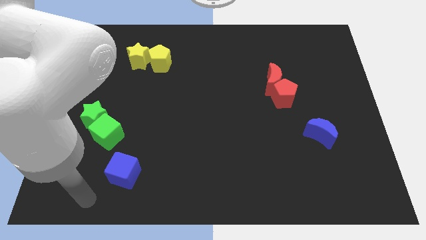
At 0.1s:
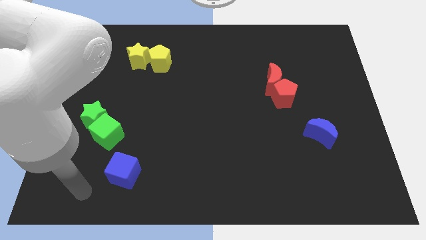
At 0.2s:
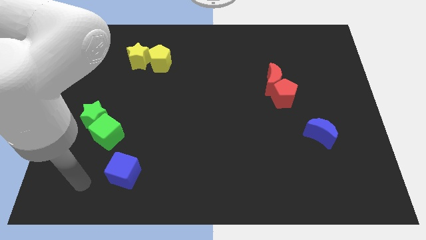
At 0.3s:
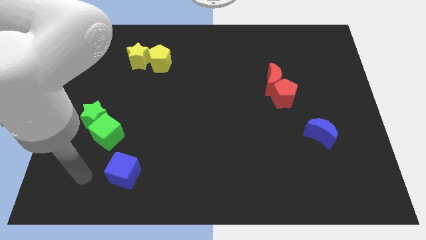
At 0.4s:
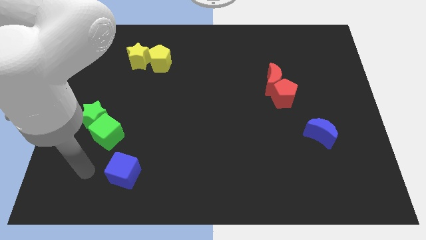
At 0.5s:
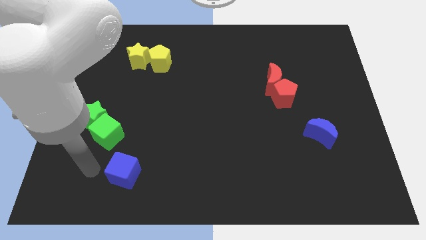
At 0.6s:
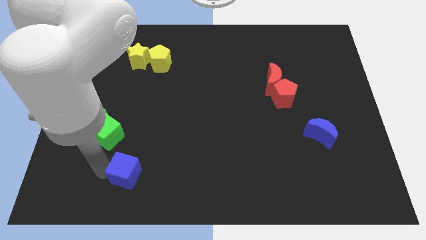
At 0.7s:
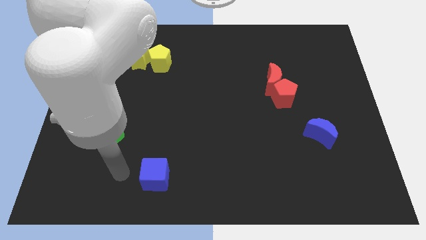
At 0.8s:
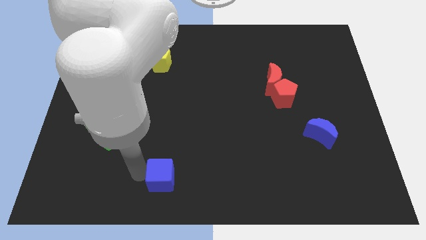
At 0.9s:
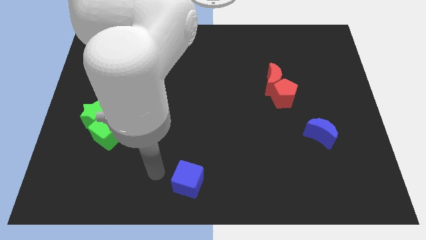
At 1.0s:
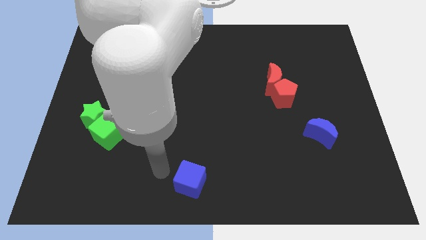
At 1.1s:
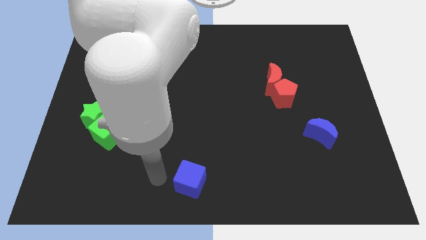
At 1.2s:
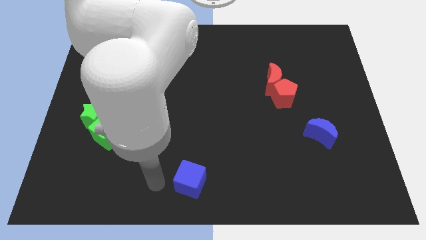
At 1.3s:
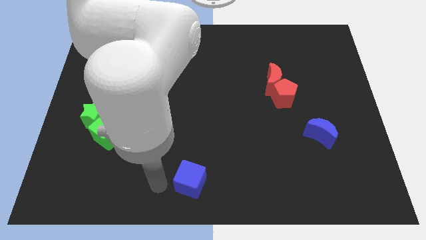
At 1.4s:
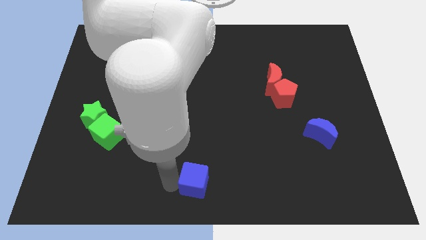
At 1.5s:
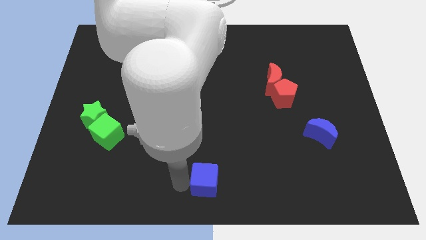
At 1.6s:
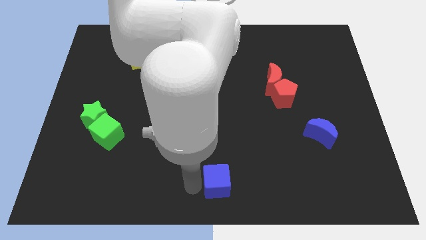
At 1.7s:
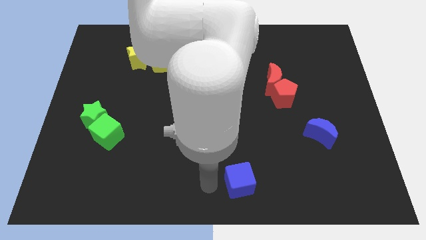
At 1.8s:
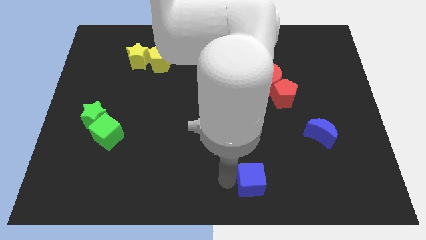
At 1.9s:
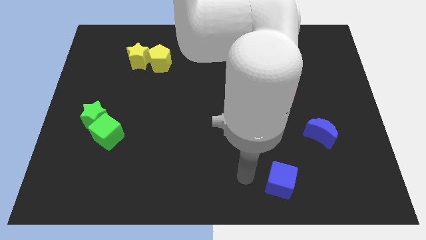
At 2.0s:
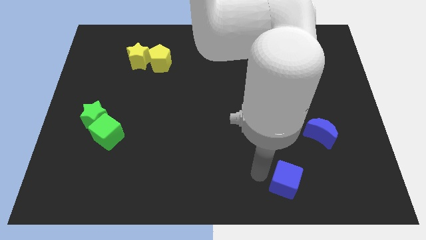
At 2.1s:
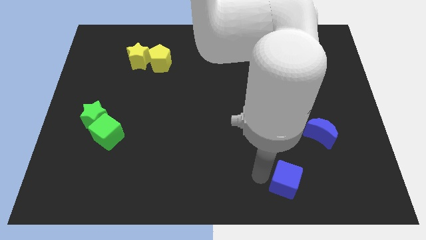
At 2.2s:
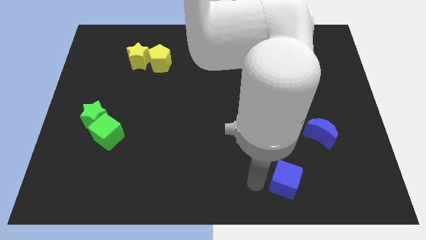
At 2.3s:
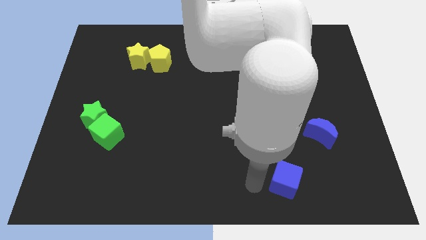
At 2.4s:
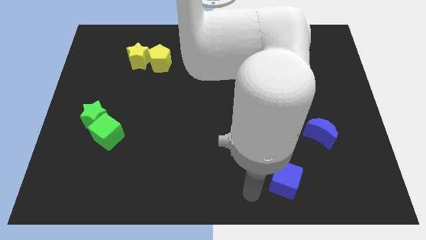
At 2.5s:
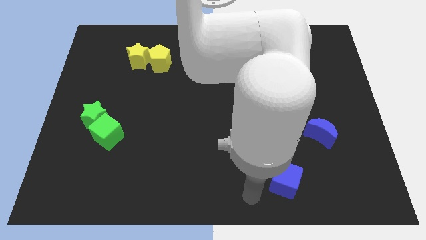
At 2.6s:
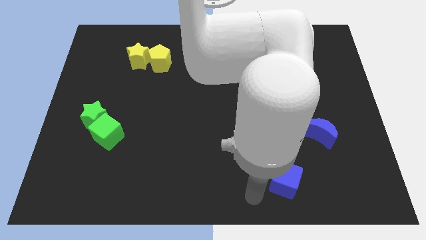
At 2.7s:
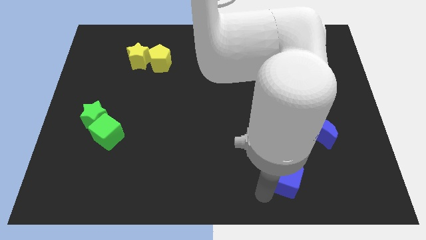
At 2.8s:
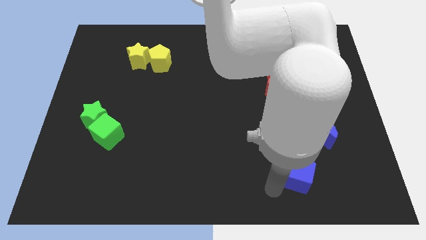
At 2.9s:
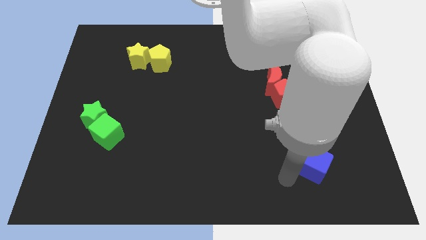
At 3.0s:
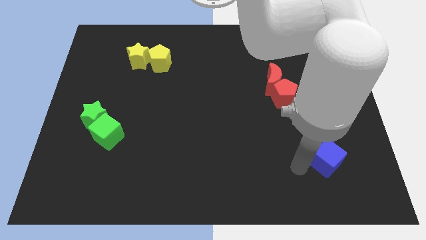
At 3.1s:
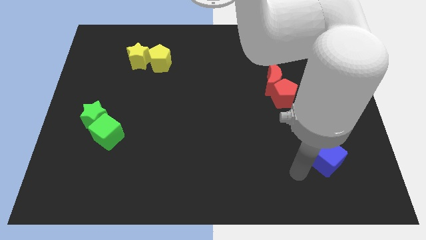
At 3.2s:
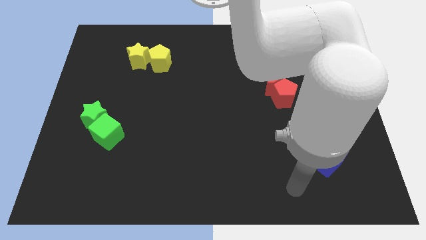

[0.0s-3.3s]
place the blue cube down to the blue moon

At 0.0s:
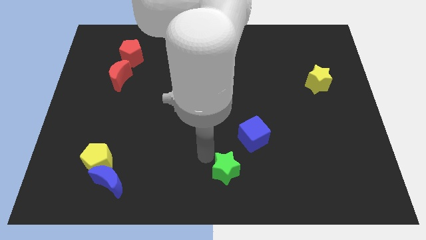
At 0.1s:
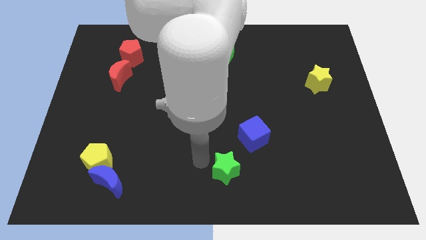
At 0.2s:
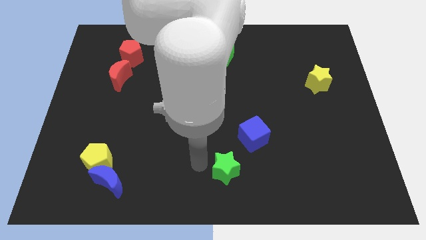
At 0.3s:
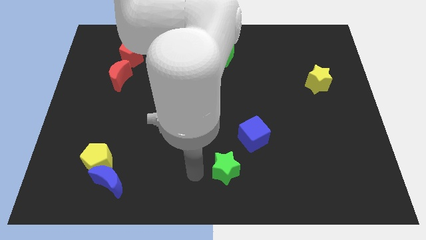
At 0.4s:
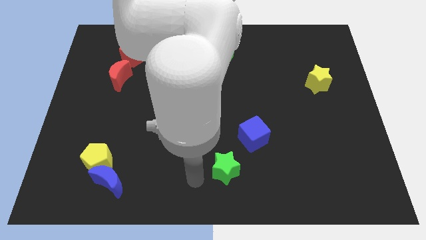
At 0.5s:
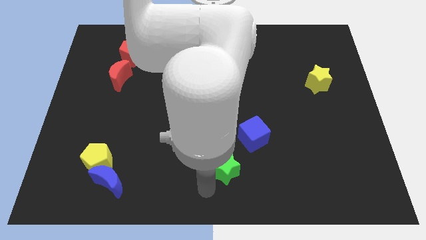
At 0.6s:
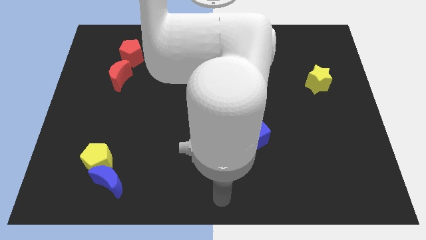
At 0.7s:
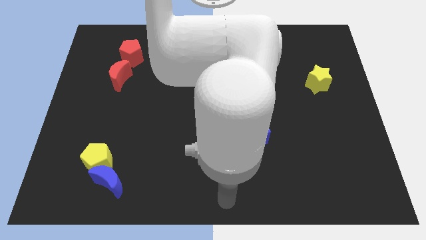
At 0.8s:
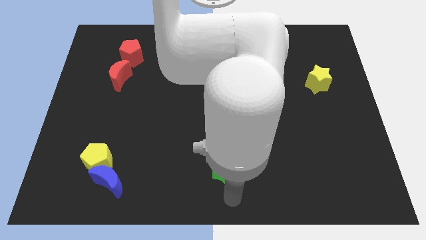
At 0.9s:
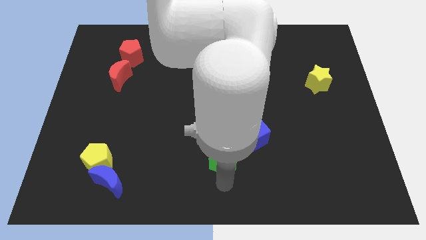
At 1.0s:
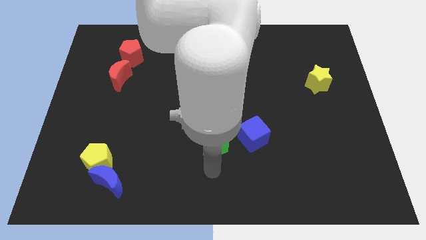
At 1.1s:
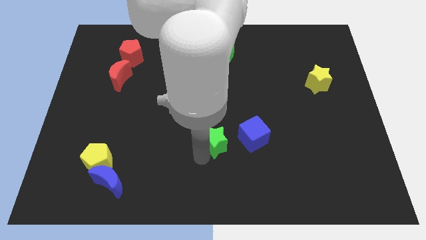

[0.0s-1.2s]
place the green star left to the blue cube

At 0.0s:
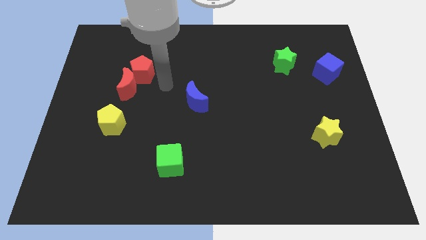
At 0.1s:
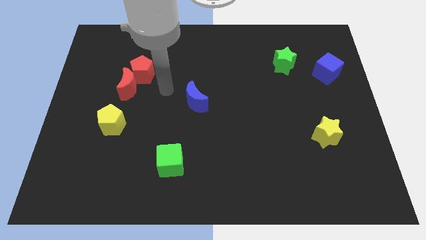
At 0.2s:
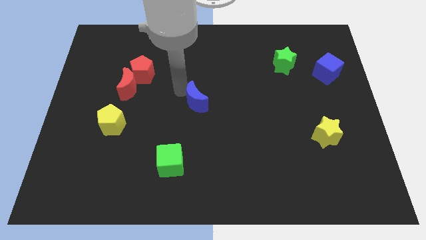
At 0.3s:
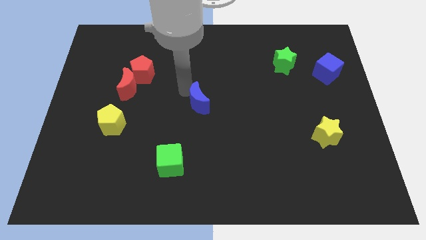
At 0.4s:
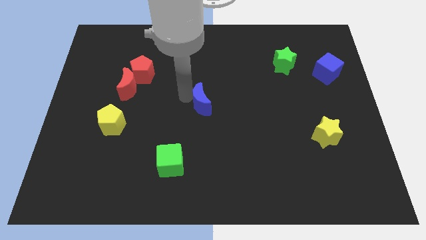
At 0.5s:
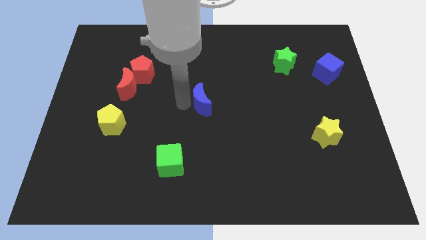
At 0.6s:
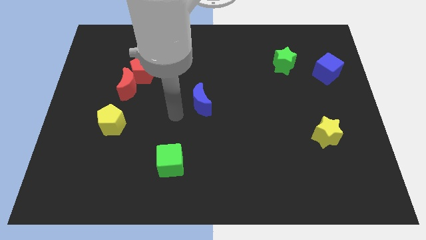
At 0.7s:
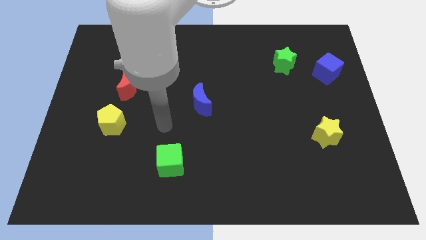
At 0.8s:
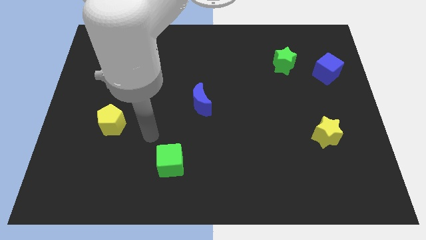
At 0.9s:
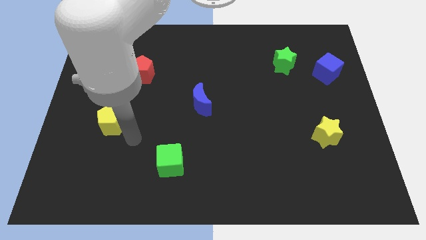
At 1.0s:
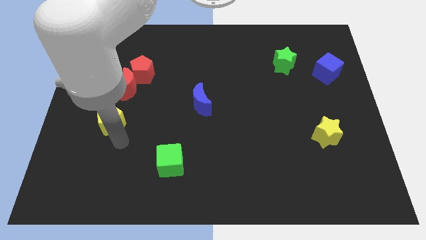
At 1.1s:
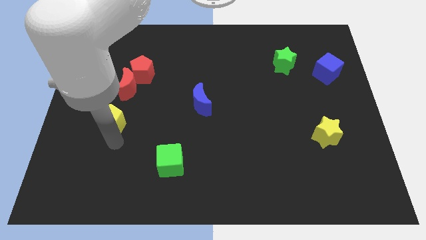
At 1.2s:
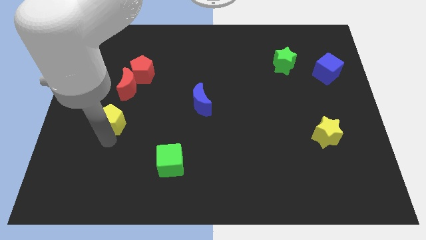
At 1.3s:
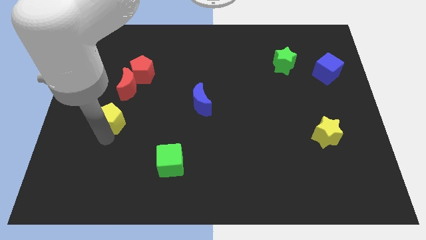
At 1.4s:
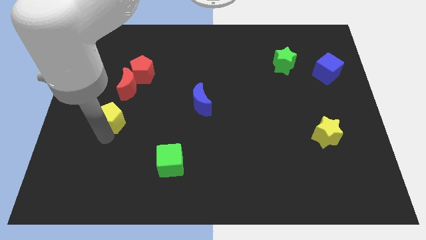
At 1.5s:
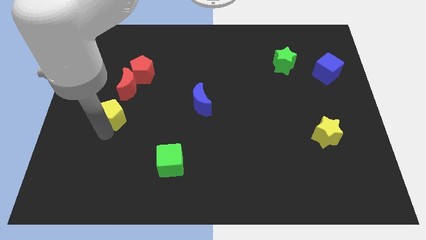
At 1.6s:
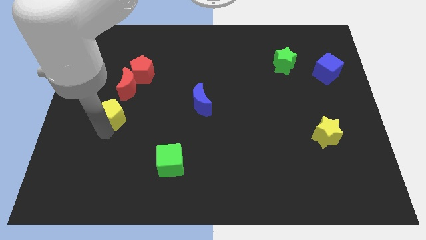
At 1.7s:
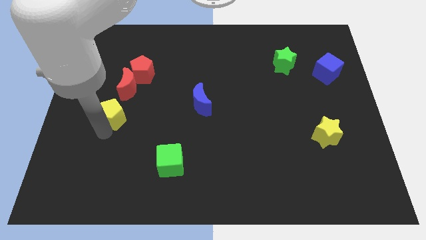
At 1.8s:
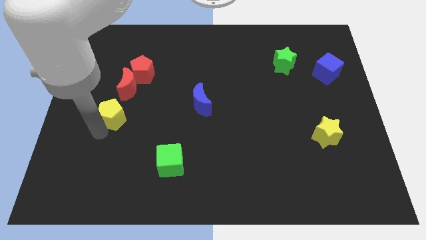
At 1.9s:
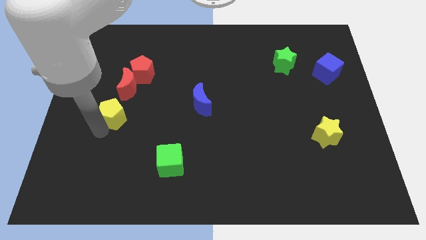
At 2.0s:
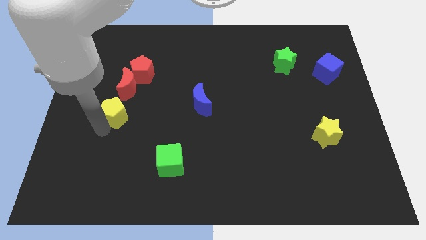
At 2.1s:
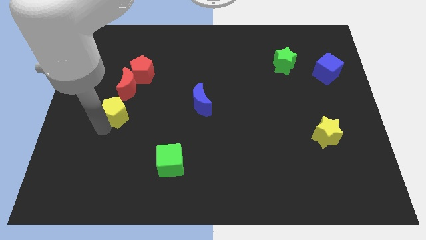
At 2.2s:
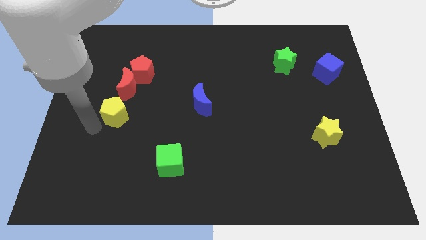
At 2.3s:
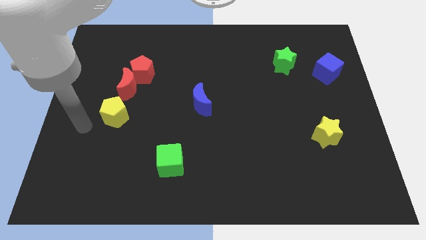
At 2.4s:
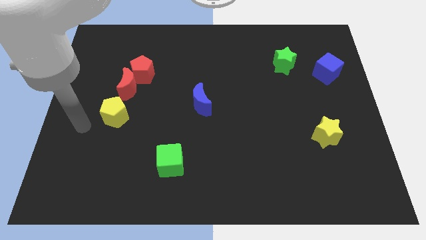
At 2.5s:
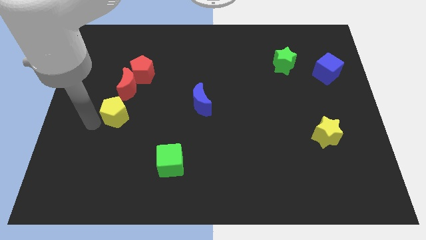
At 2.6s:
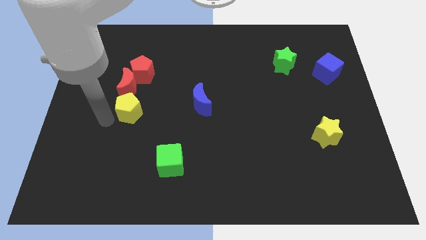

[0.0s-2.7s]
slide the yellow pentagon close to the red moon

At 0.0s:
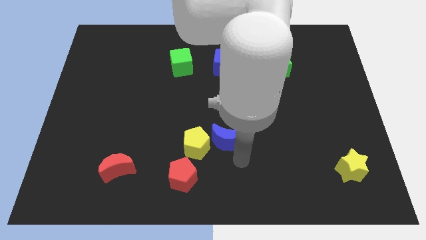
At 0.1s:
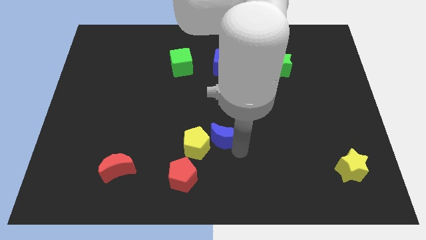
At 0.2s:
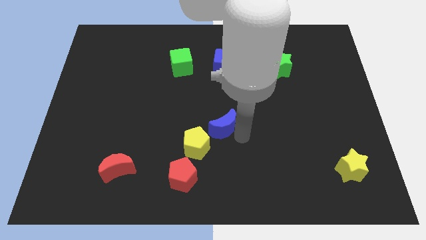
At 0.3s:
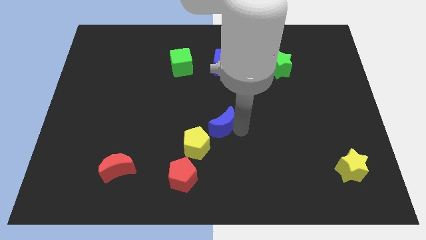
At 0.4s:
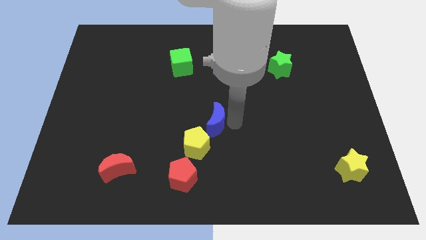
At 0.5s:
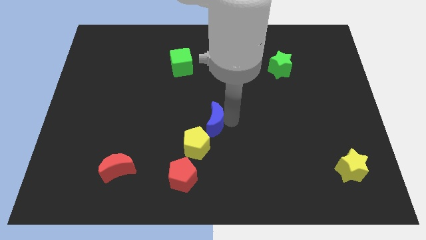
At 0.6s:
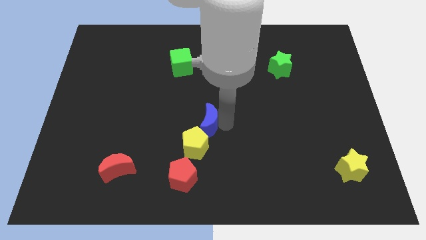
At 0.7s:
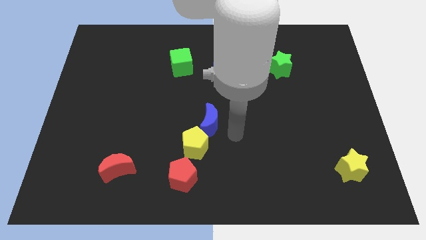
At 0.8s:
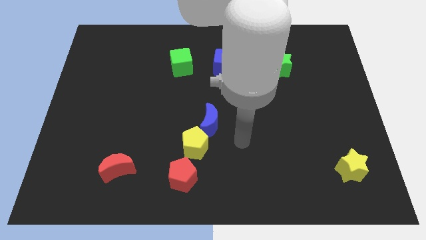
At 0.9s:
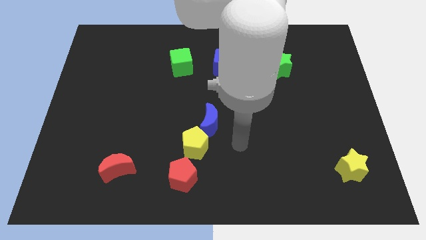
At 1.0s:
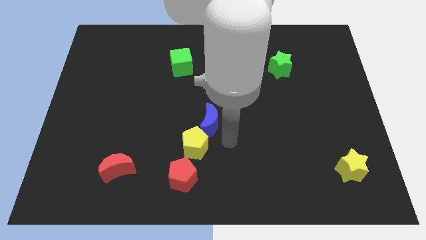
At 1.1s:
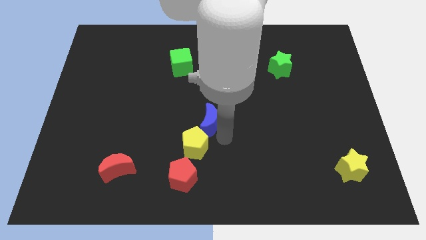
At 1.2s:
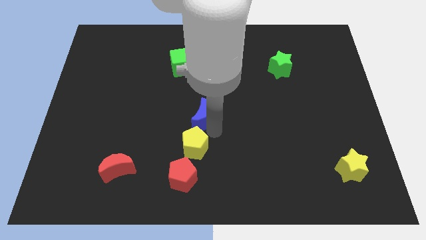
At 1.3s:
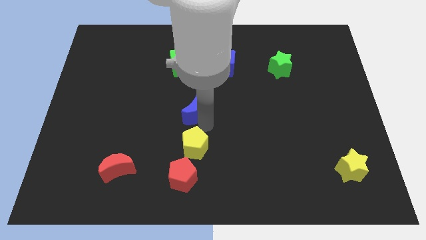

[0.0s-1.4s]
push blue crescent above yellow pentagon

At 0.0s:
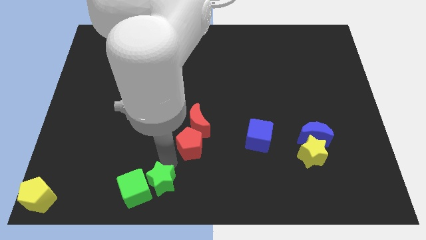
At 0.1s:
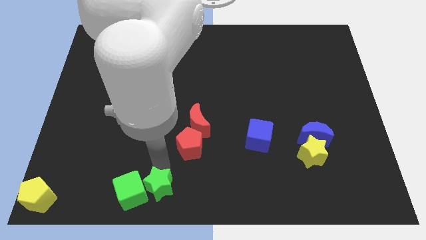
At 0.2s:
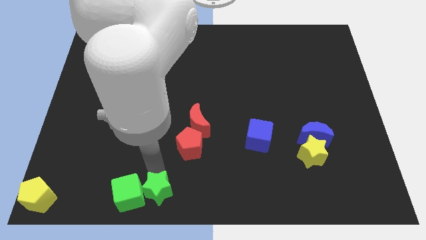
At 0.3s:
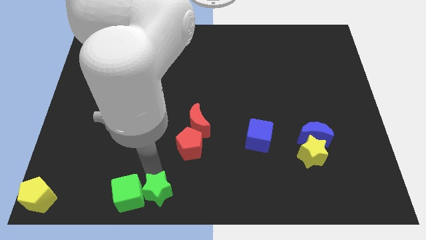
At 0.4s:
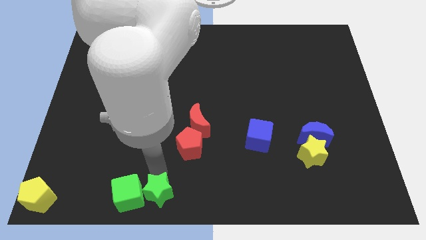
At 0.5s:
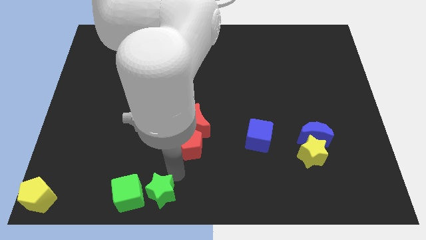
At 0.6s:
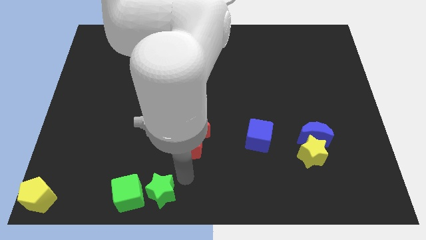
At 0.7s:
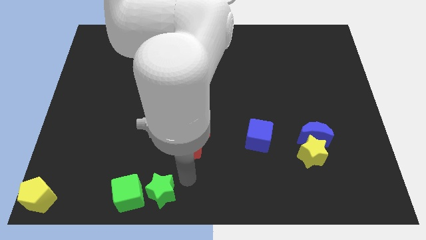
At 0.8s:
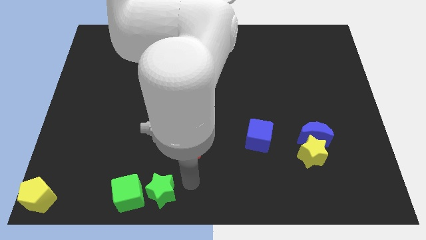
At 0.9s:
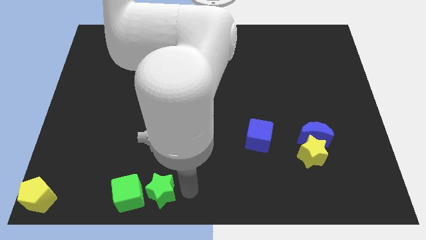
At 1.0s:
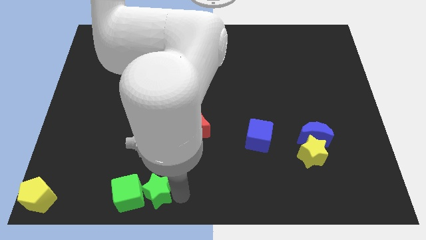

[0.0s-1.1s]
place green star right to the green cube
